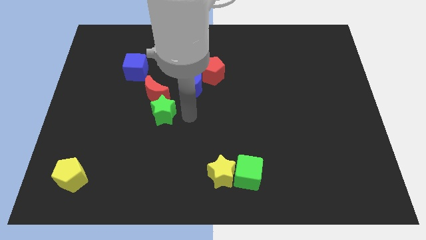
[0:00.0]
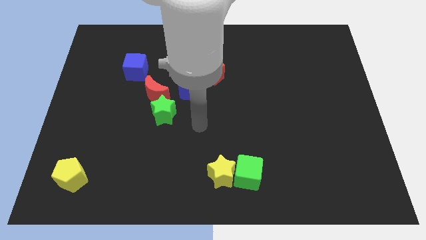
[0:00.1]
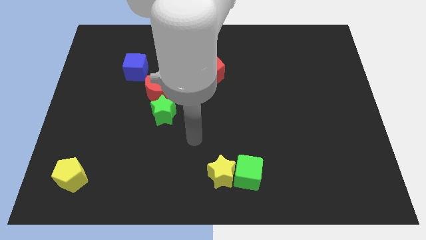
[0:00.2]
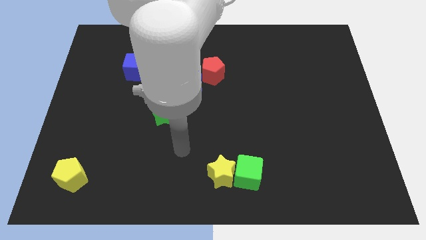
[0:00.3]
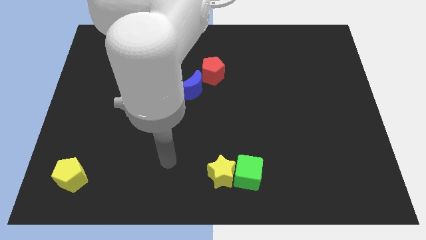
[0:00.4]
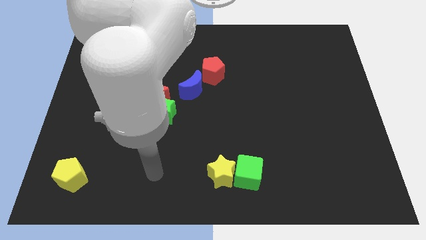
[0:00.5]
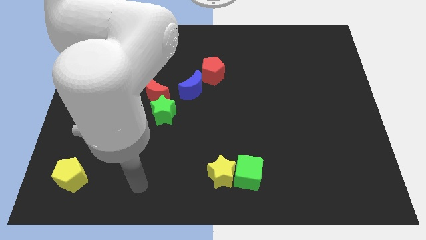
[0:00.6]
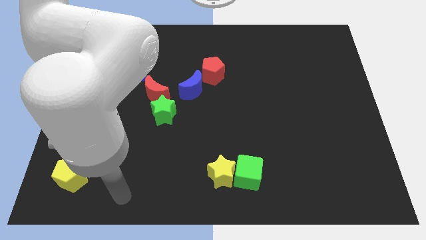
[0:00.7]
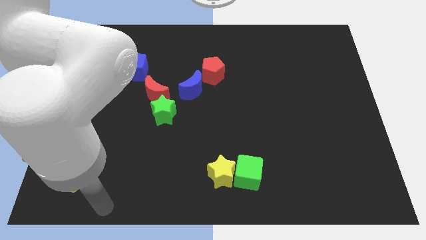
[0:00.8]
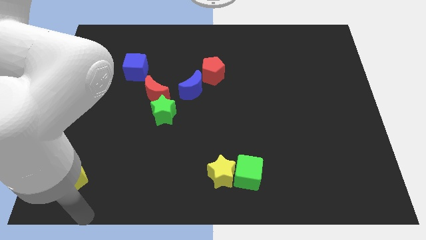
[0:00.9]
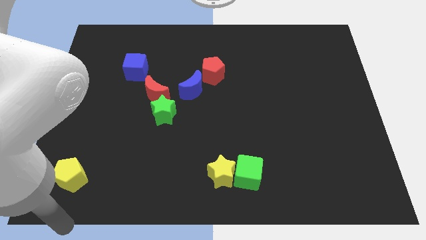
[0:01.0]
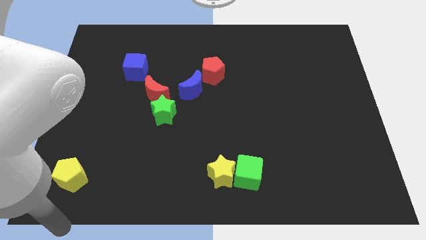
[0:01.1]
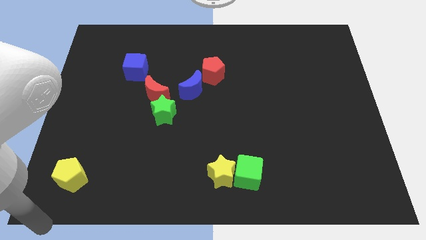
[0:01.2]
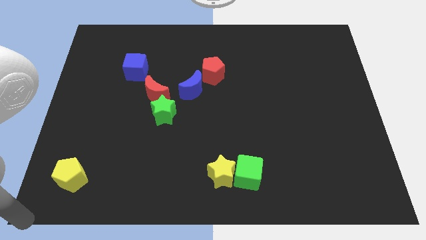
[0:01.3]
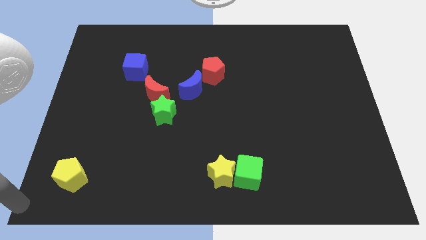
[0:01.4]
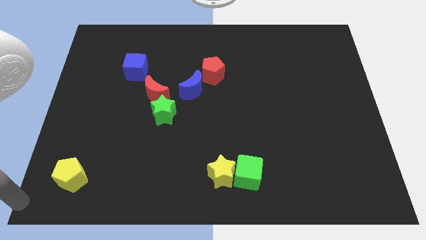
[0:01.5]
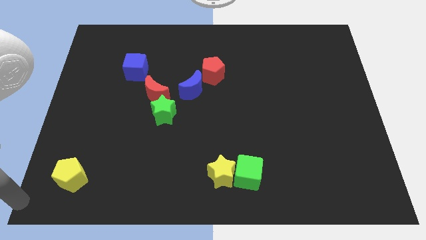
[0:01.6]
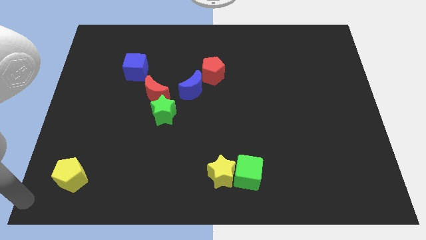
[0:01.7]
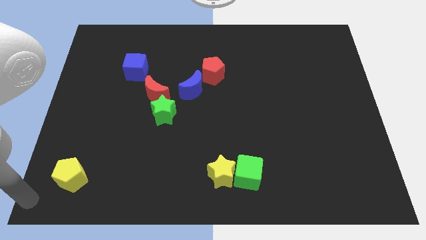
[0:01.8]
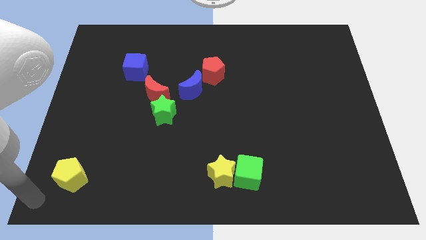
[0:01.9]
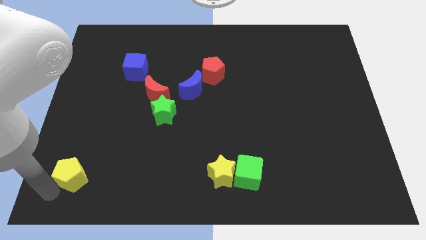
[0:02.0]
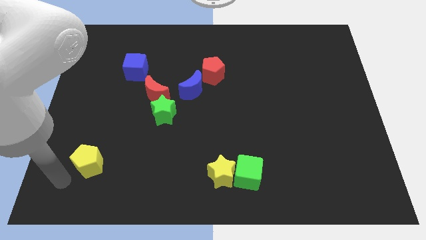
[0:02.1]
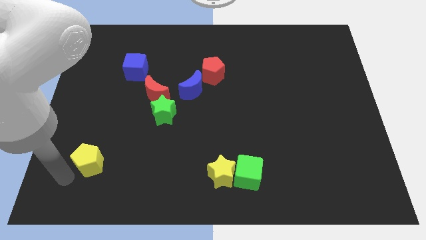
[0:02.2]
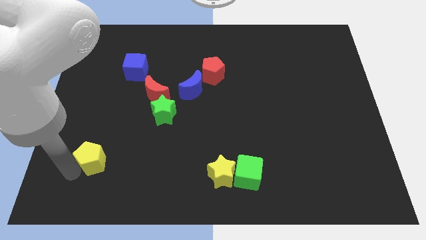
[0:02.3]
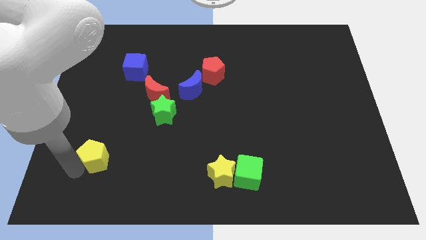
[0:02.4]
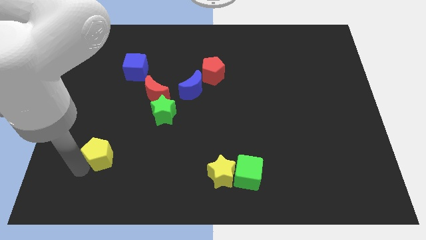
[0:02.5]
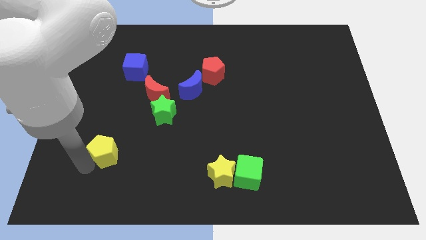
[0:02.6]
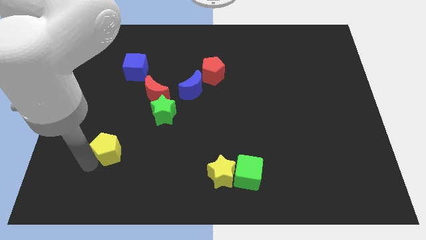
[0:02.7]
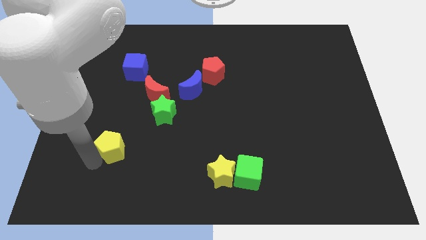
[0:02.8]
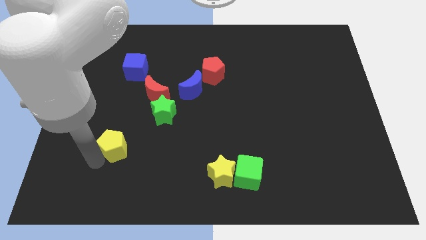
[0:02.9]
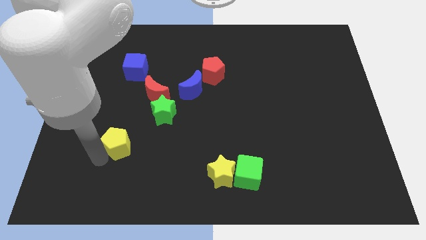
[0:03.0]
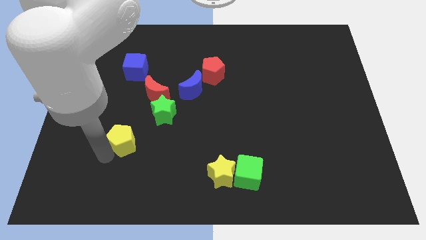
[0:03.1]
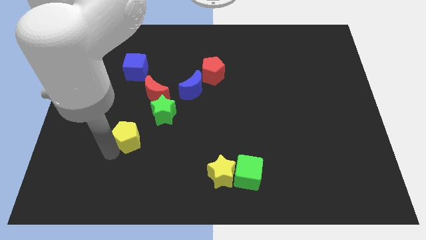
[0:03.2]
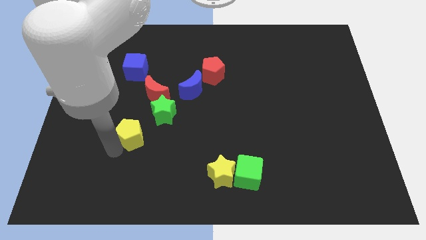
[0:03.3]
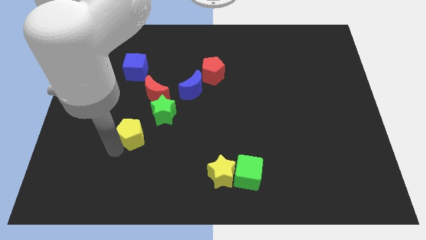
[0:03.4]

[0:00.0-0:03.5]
push the yellow pentagon towards the bottom left side of the green star

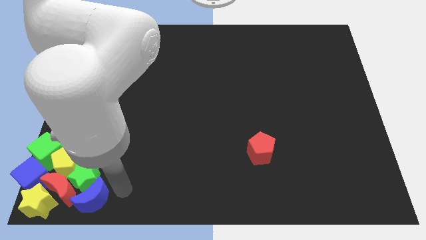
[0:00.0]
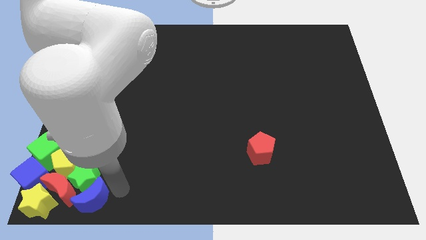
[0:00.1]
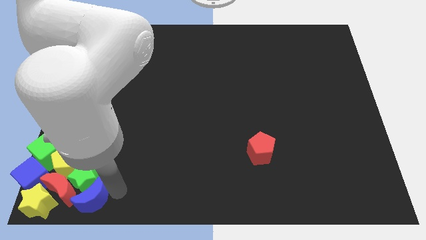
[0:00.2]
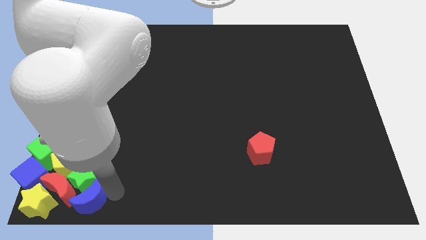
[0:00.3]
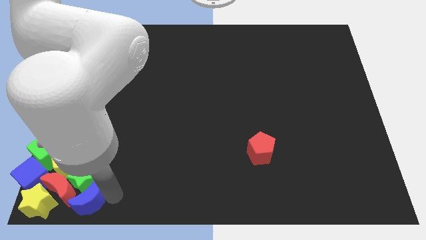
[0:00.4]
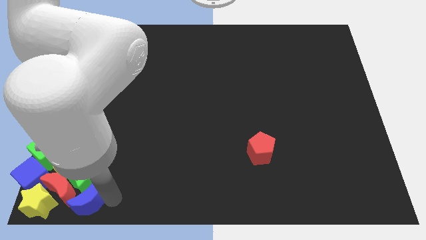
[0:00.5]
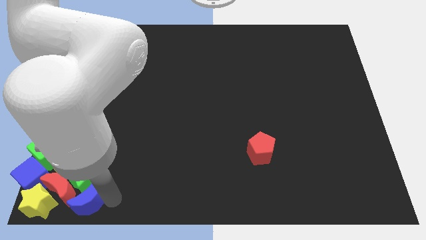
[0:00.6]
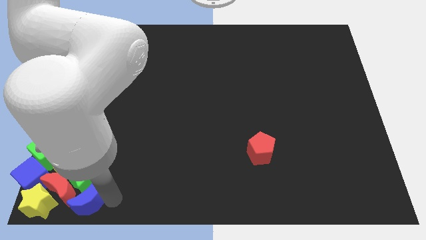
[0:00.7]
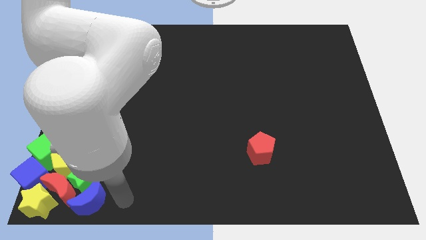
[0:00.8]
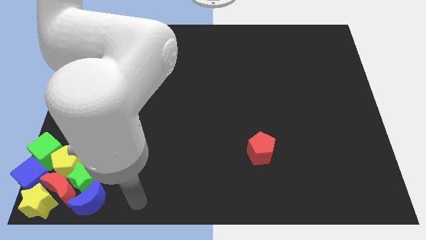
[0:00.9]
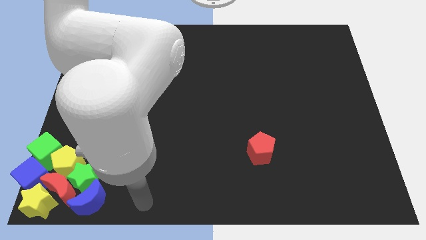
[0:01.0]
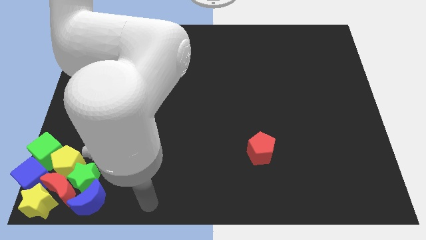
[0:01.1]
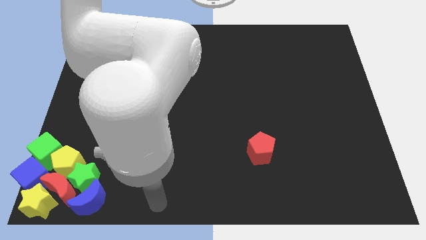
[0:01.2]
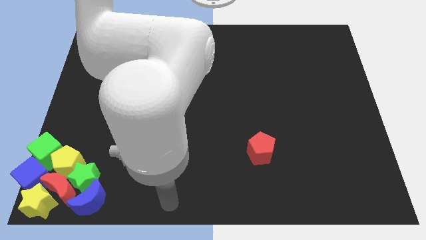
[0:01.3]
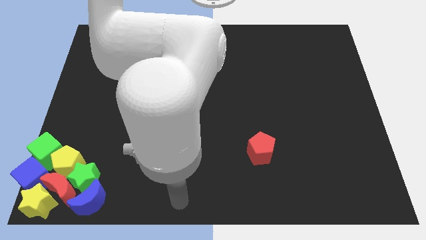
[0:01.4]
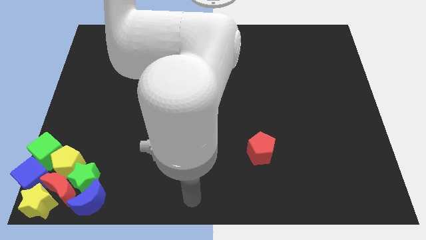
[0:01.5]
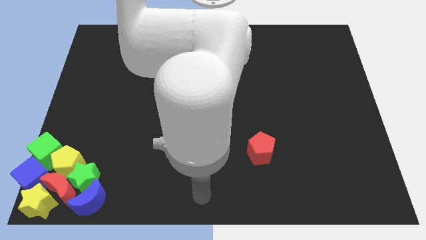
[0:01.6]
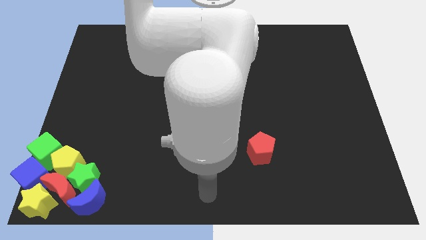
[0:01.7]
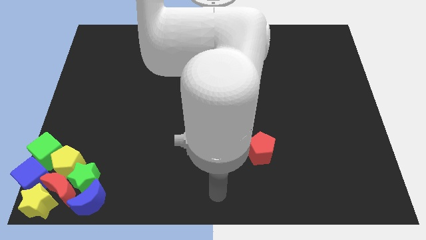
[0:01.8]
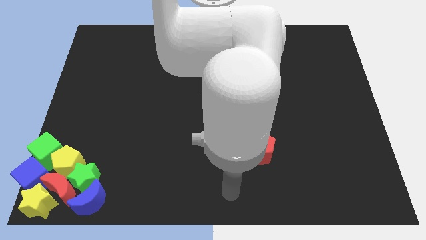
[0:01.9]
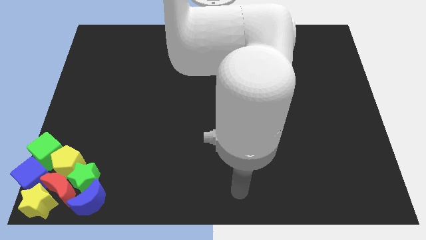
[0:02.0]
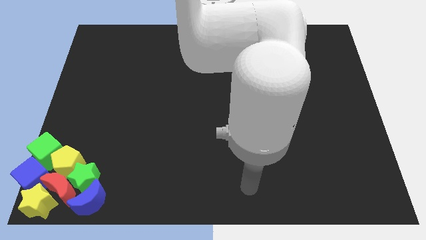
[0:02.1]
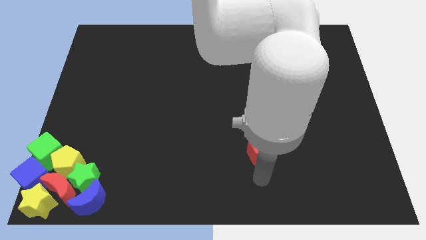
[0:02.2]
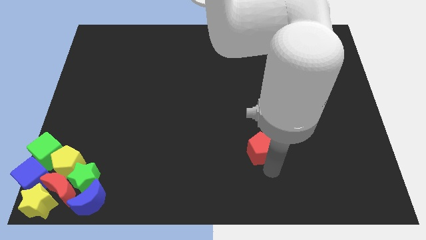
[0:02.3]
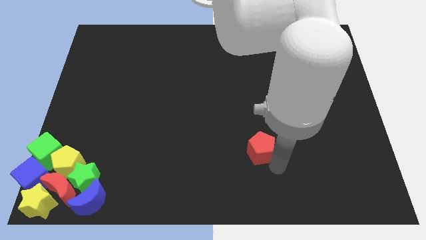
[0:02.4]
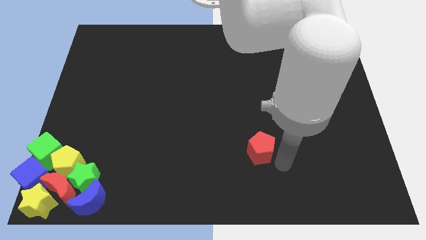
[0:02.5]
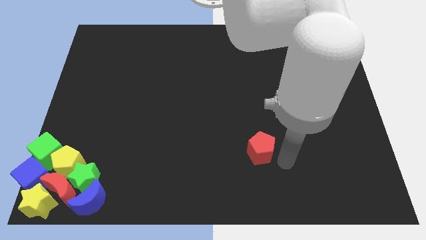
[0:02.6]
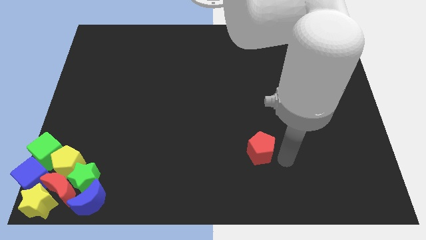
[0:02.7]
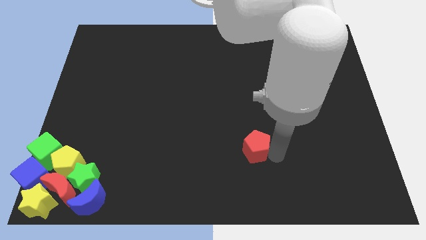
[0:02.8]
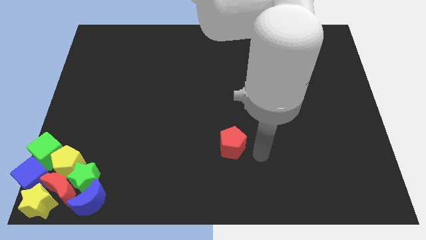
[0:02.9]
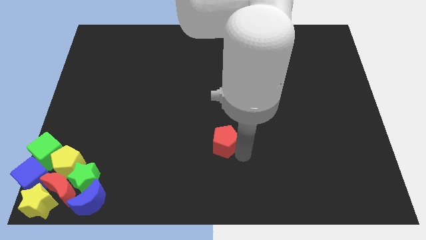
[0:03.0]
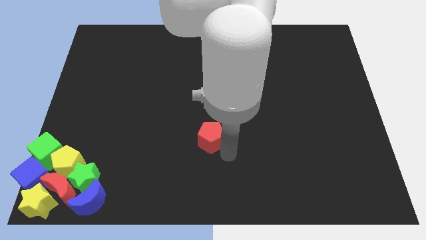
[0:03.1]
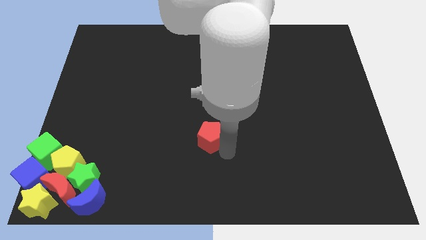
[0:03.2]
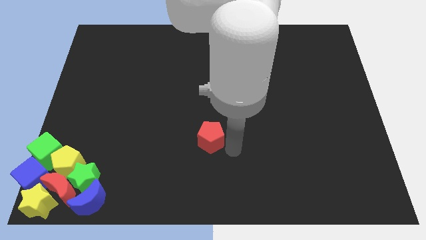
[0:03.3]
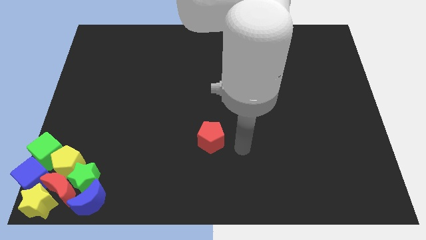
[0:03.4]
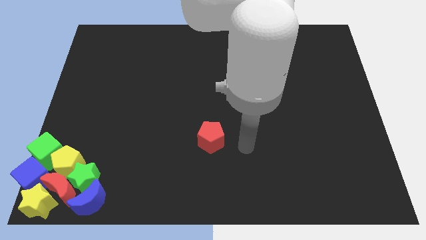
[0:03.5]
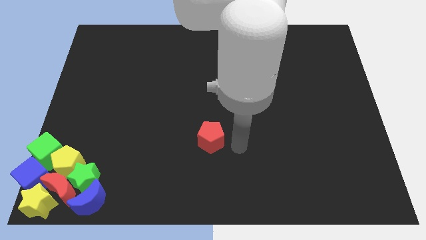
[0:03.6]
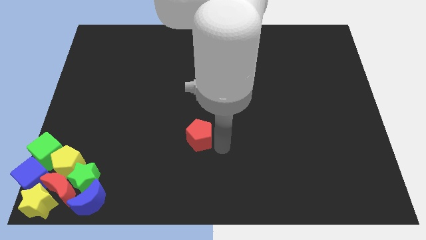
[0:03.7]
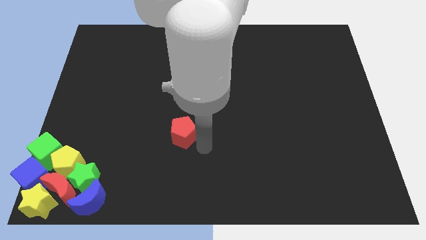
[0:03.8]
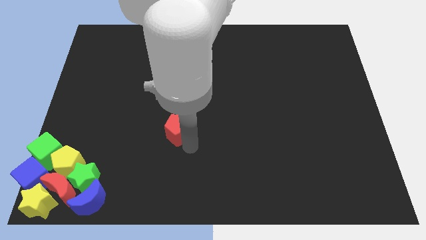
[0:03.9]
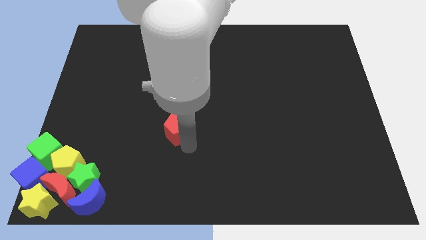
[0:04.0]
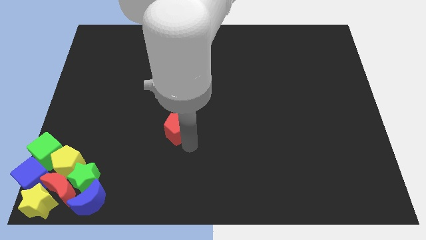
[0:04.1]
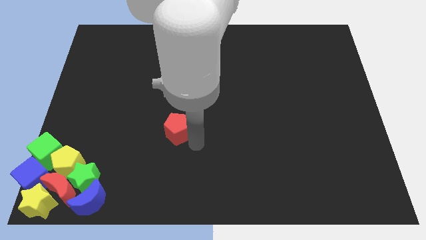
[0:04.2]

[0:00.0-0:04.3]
move the red pentagon slightly left side of the board

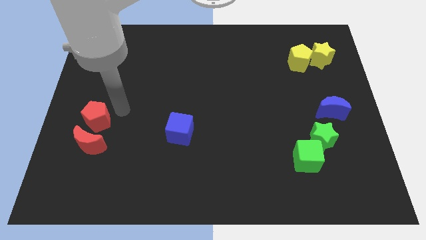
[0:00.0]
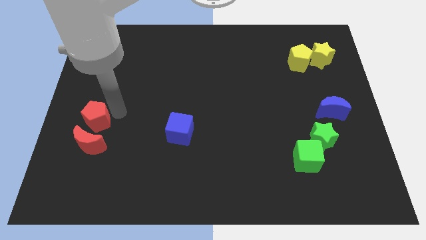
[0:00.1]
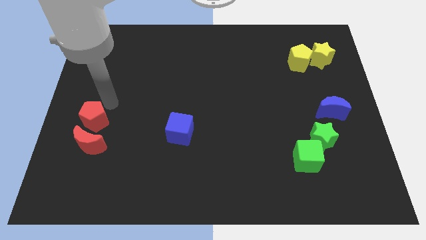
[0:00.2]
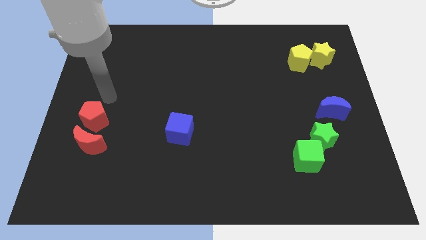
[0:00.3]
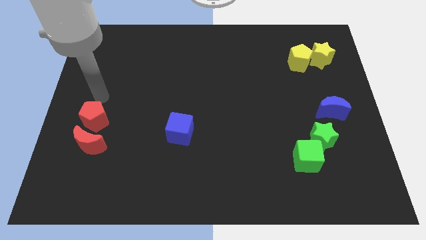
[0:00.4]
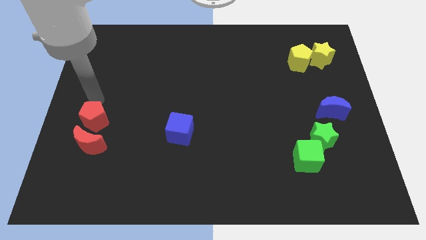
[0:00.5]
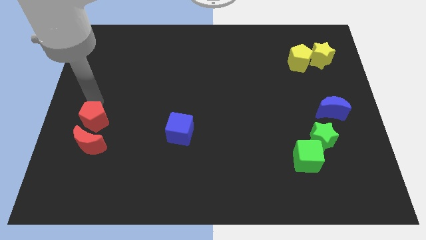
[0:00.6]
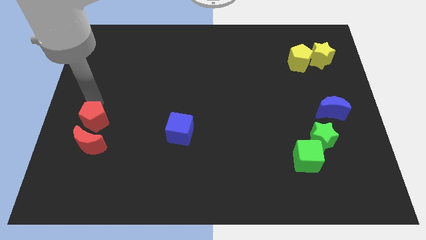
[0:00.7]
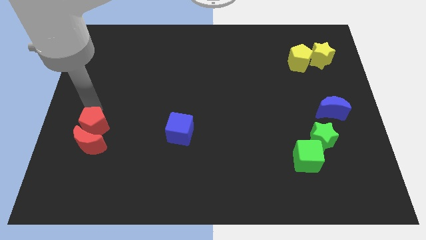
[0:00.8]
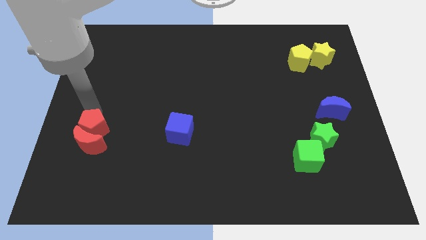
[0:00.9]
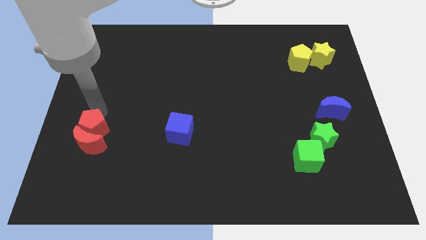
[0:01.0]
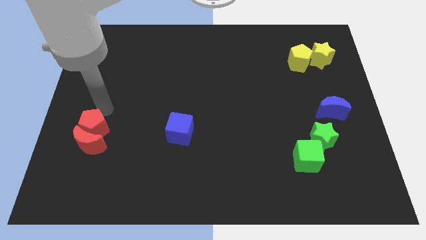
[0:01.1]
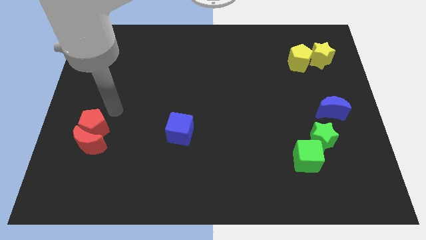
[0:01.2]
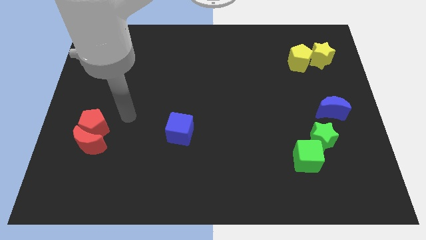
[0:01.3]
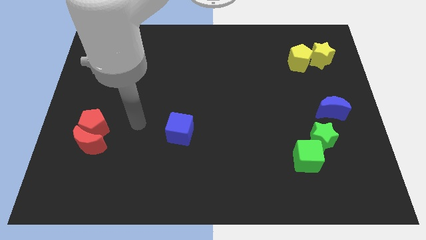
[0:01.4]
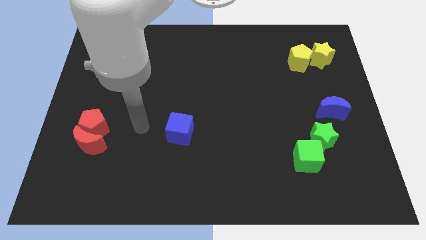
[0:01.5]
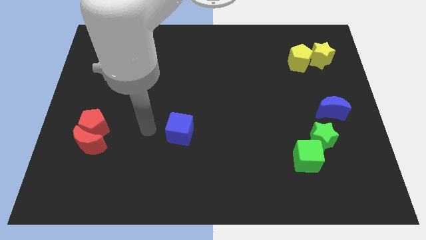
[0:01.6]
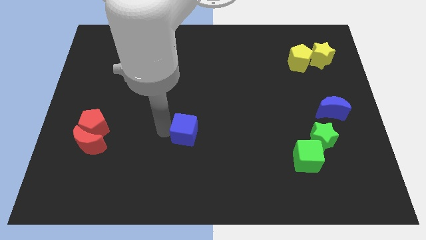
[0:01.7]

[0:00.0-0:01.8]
place the red pentagon above the red crescent
